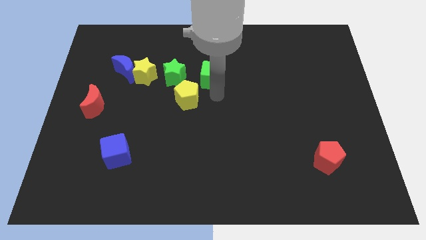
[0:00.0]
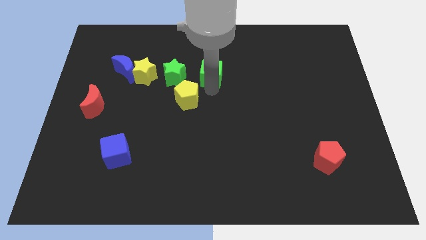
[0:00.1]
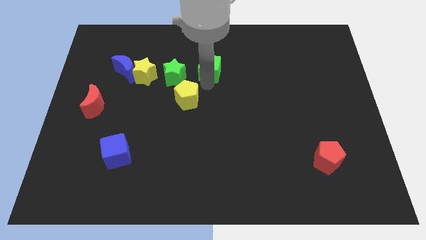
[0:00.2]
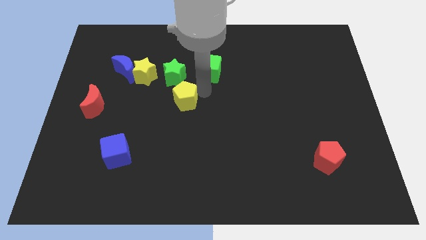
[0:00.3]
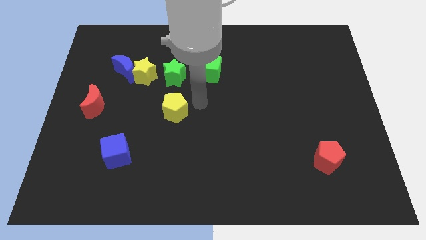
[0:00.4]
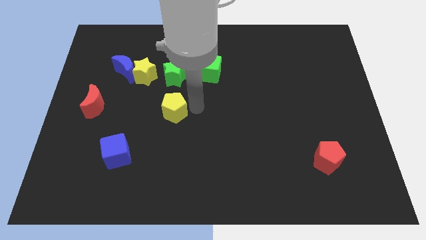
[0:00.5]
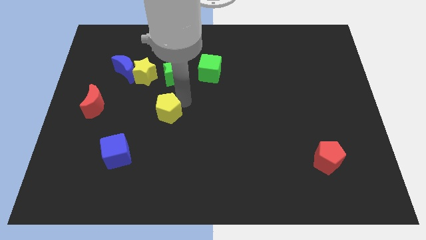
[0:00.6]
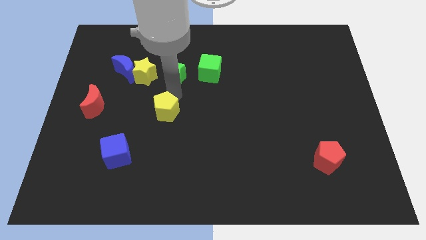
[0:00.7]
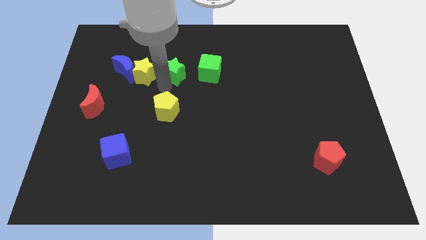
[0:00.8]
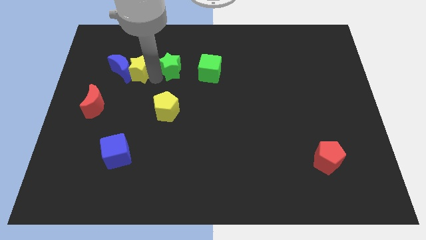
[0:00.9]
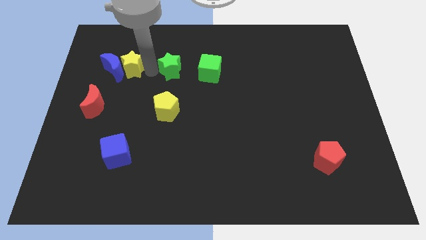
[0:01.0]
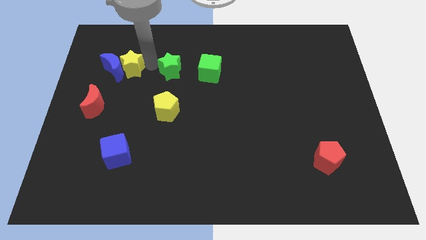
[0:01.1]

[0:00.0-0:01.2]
place yellow pentagon to the bottom of green star

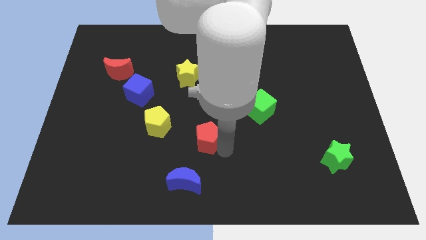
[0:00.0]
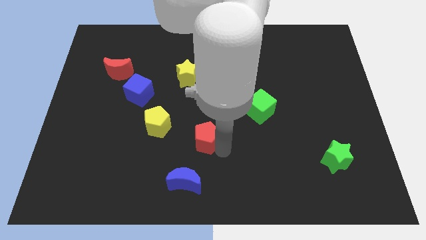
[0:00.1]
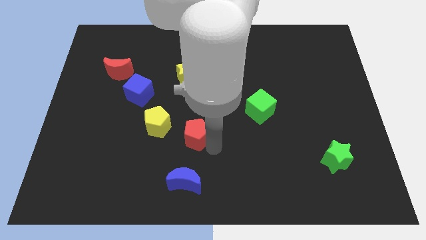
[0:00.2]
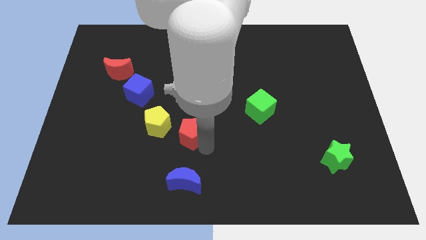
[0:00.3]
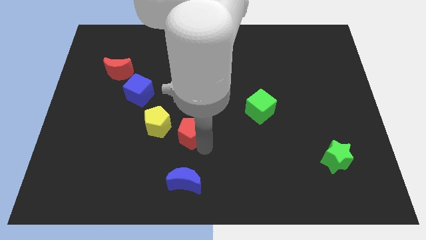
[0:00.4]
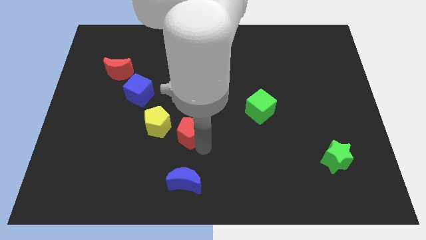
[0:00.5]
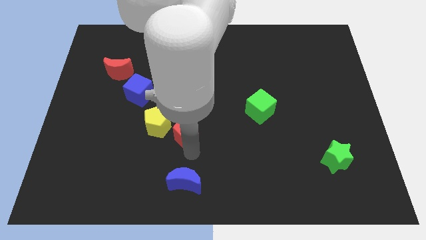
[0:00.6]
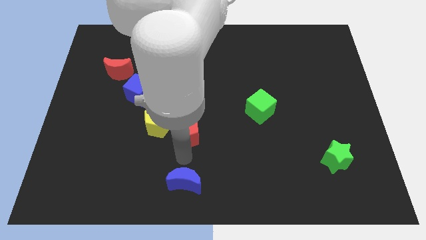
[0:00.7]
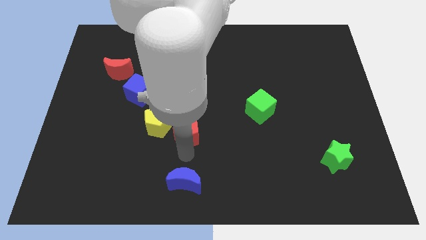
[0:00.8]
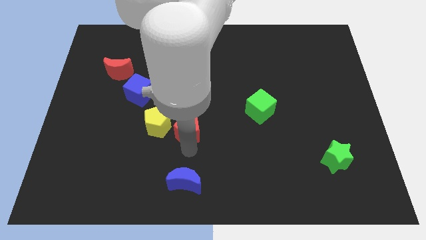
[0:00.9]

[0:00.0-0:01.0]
place red pentagon right to yellow pentagon

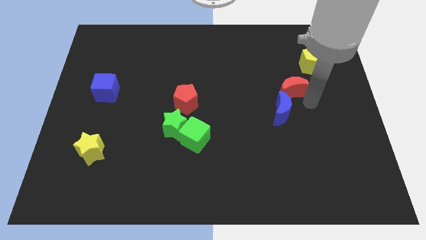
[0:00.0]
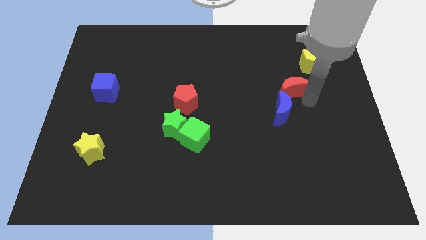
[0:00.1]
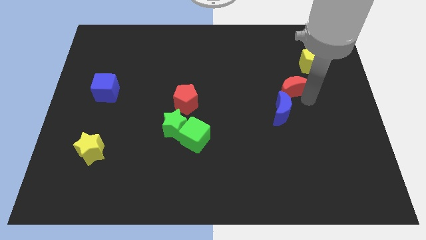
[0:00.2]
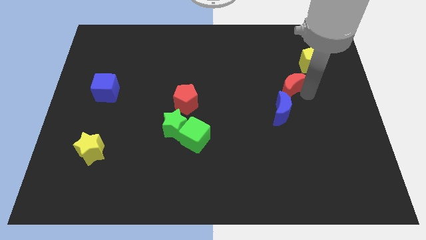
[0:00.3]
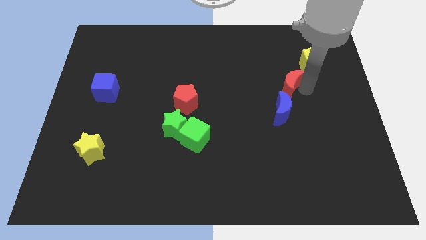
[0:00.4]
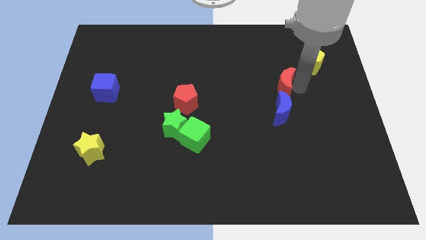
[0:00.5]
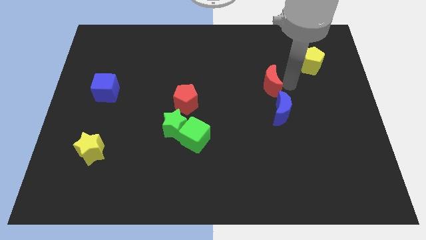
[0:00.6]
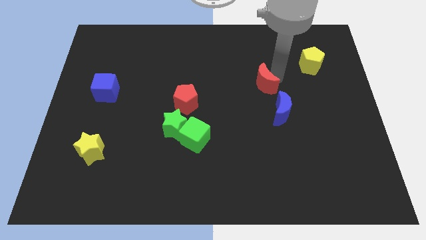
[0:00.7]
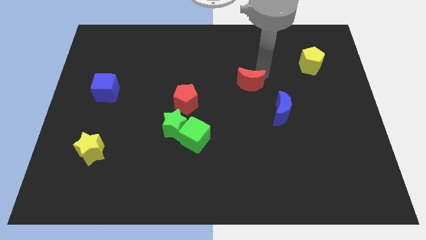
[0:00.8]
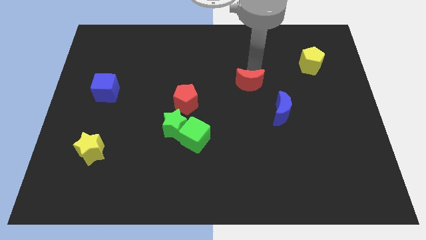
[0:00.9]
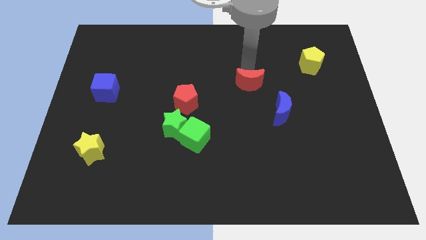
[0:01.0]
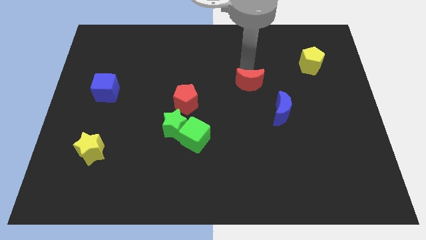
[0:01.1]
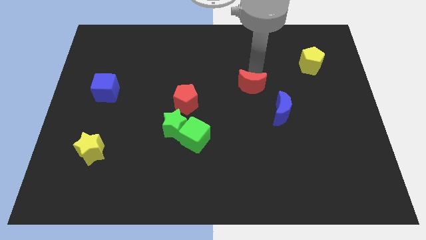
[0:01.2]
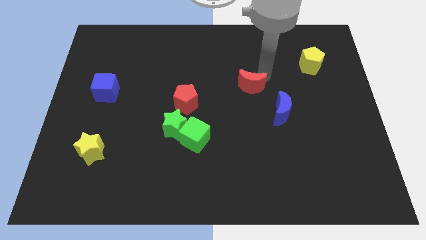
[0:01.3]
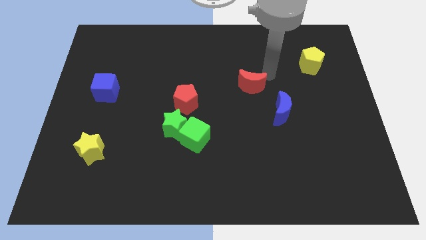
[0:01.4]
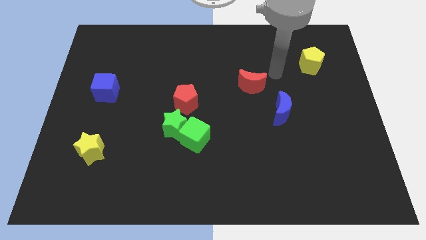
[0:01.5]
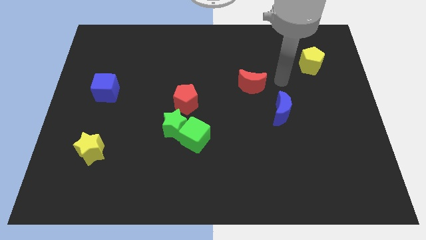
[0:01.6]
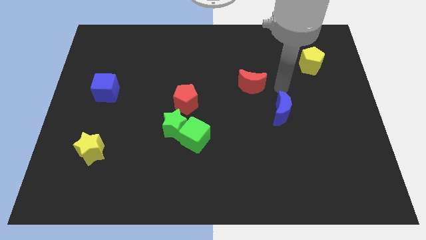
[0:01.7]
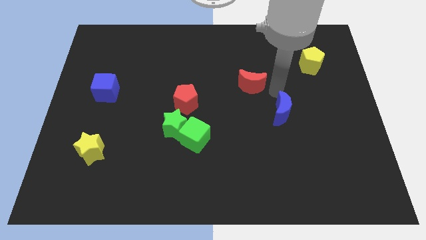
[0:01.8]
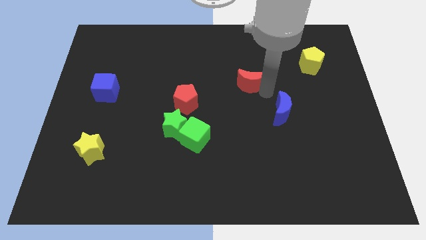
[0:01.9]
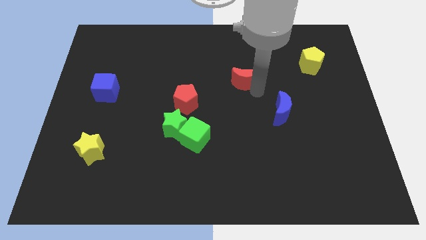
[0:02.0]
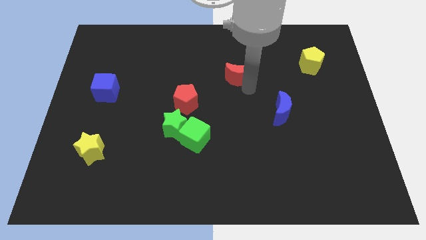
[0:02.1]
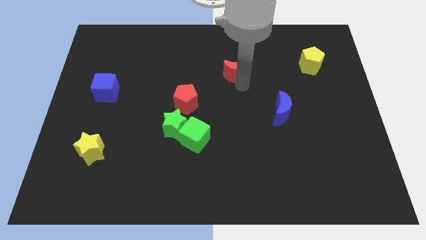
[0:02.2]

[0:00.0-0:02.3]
place the red moon diagonally to the red pentagon

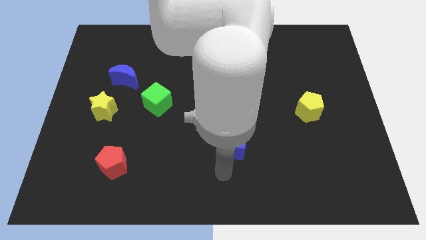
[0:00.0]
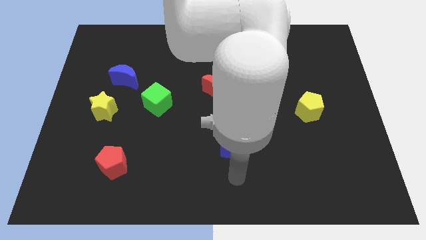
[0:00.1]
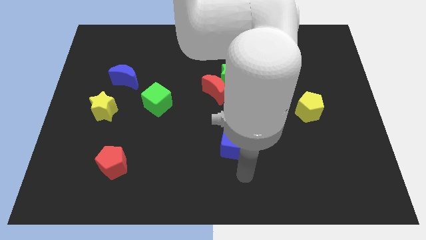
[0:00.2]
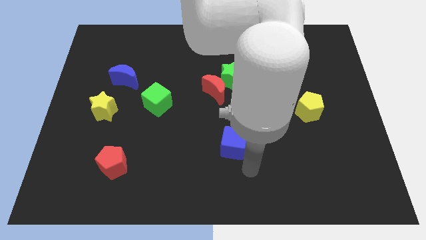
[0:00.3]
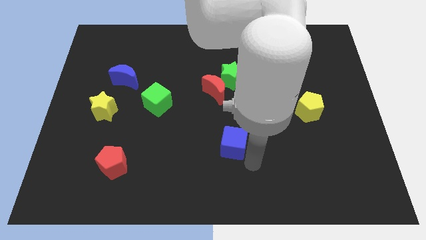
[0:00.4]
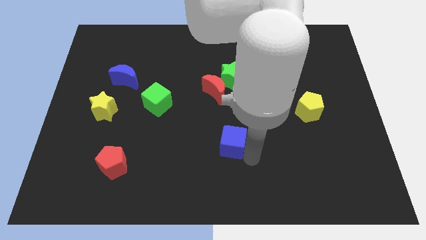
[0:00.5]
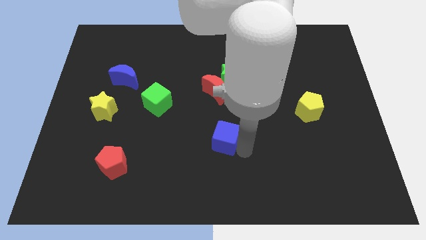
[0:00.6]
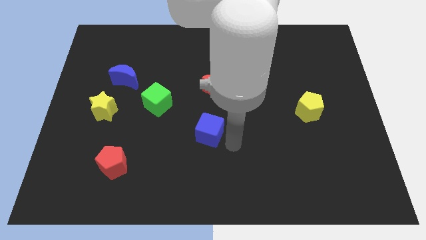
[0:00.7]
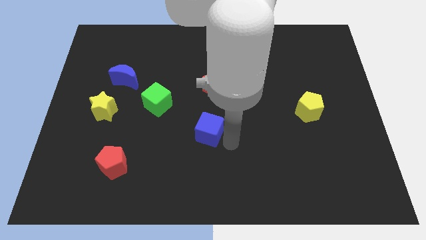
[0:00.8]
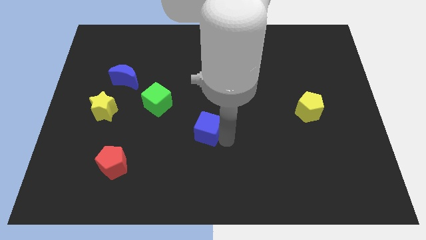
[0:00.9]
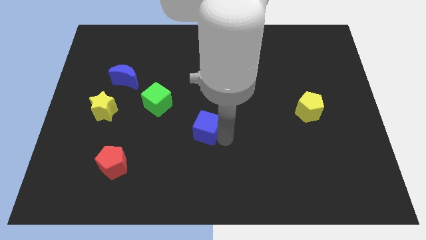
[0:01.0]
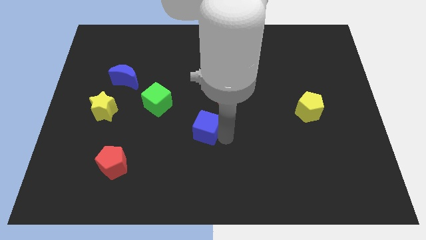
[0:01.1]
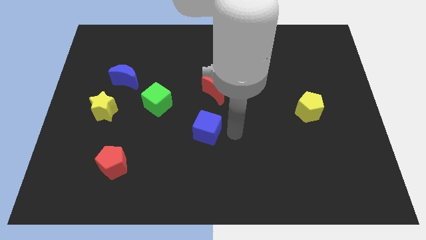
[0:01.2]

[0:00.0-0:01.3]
push the blue cube to the bottom side of the red crescent

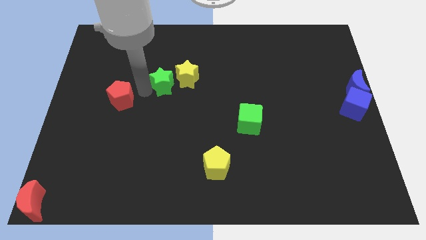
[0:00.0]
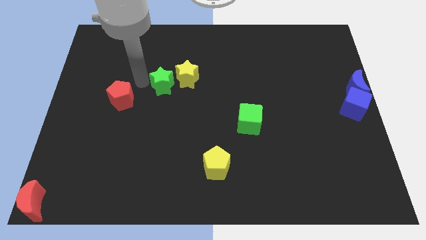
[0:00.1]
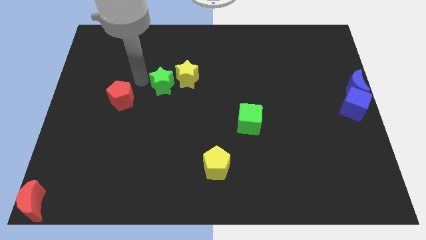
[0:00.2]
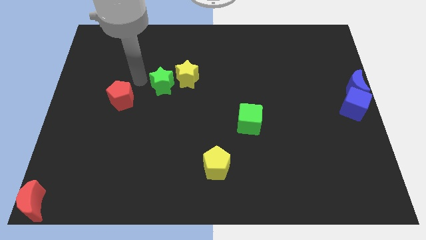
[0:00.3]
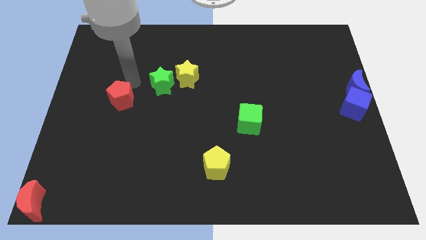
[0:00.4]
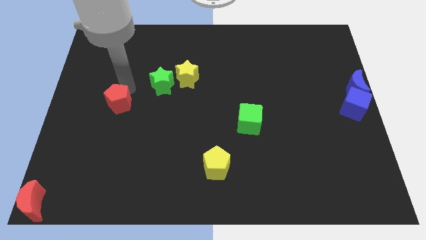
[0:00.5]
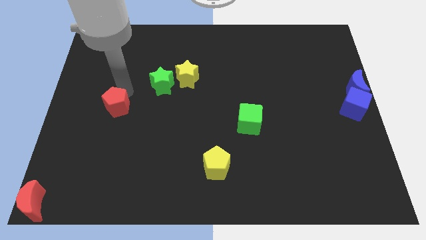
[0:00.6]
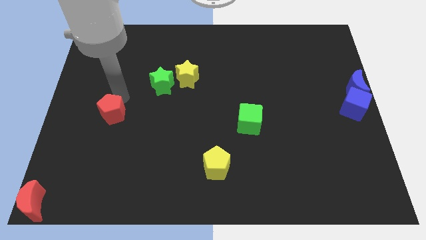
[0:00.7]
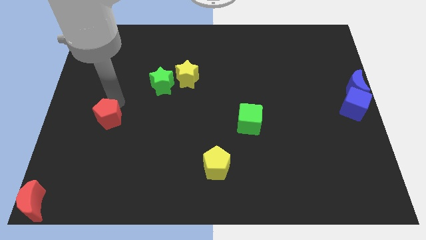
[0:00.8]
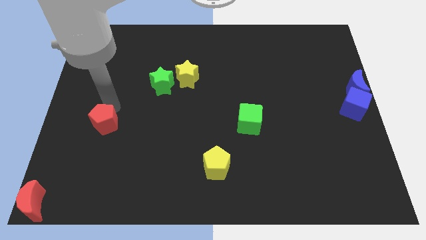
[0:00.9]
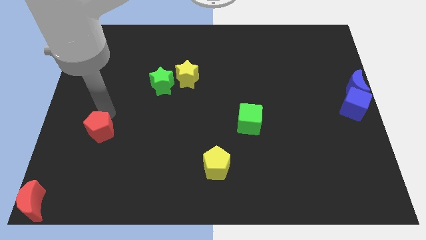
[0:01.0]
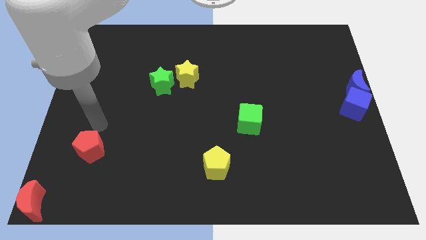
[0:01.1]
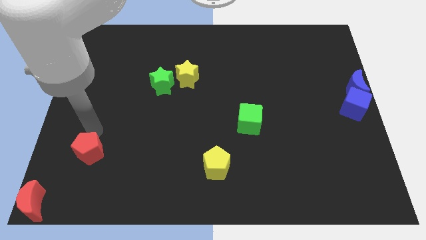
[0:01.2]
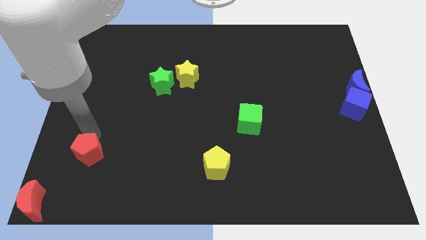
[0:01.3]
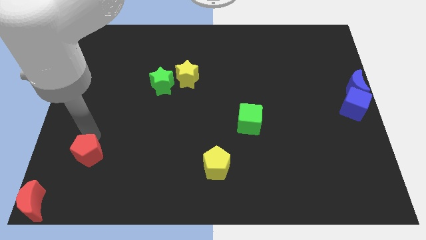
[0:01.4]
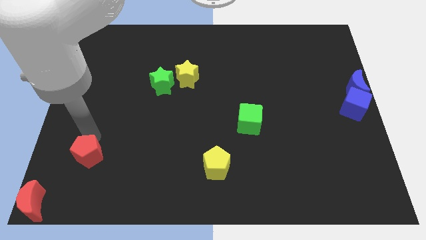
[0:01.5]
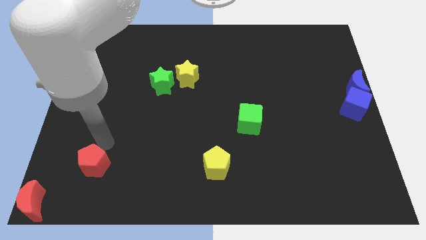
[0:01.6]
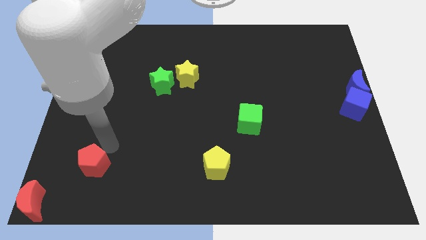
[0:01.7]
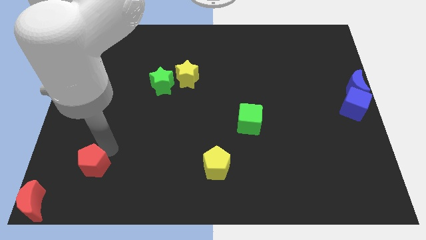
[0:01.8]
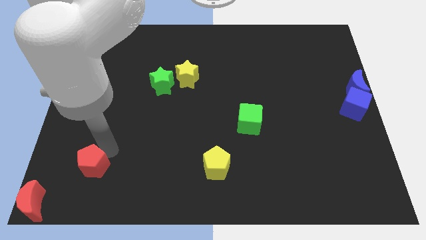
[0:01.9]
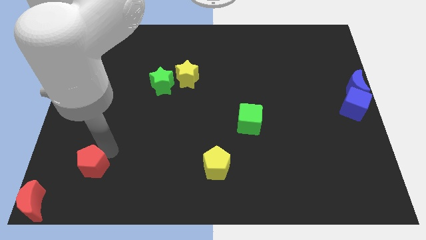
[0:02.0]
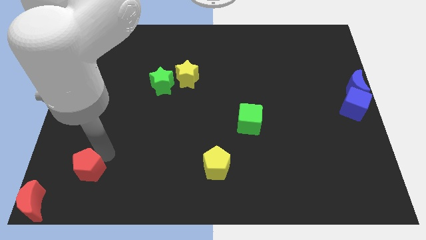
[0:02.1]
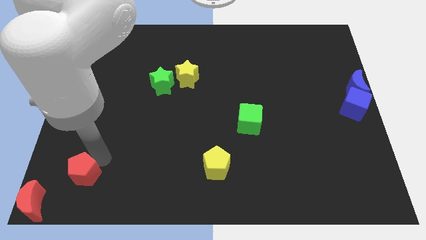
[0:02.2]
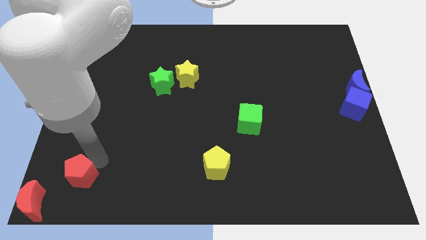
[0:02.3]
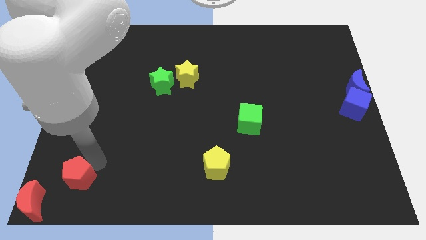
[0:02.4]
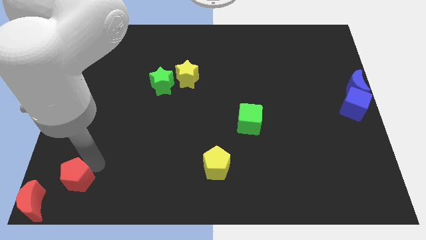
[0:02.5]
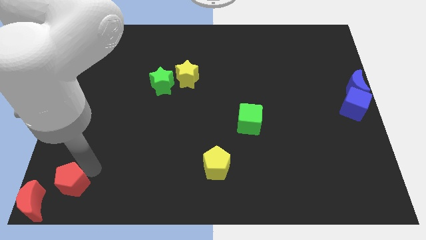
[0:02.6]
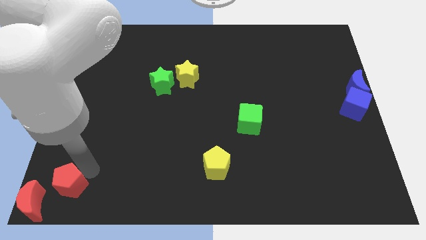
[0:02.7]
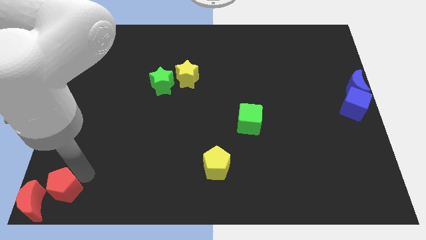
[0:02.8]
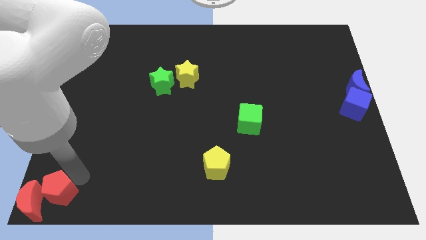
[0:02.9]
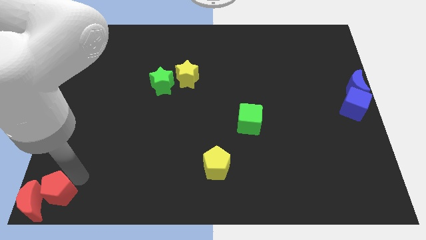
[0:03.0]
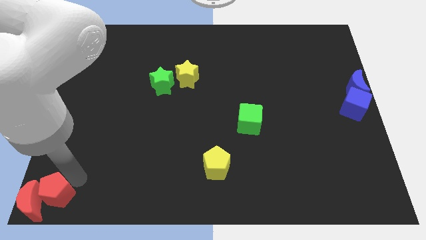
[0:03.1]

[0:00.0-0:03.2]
push red pentagon into red moon
